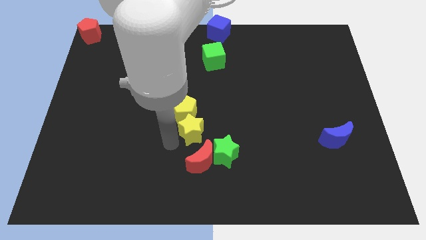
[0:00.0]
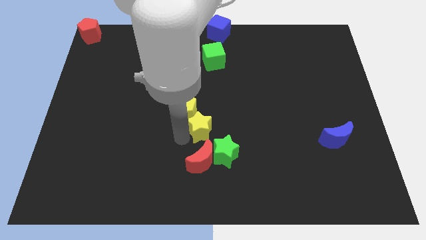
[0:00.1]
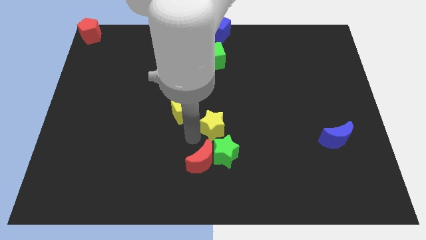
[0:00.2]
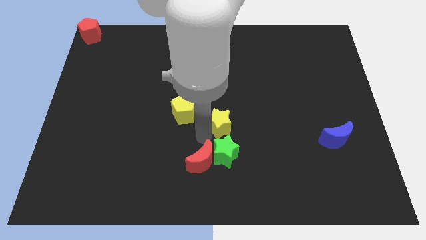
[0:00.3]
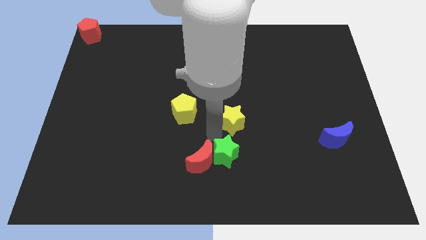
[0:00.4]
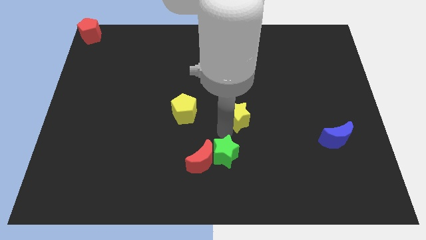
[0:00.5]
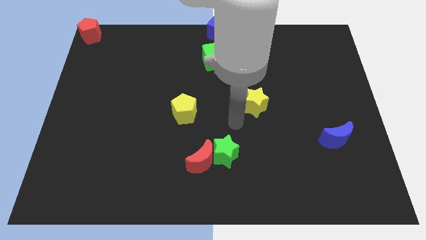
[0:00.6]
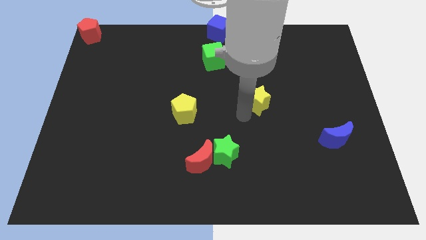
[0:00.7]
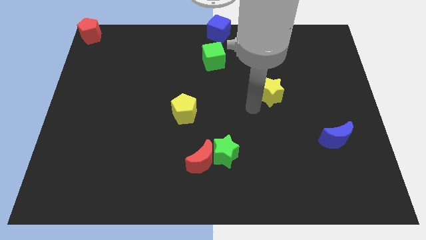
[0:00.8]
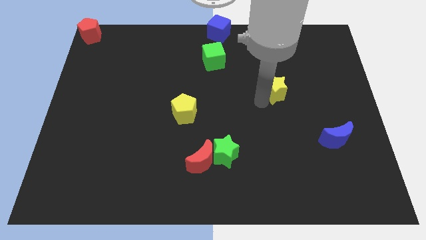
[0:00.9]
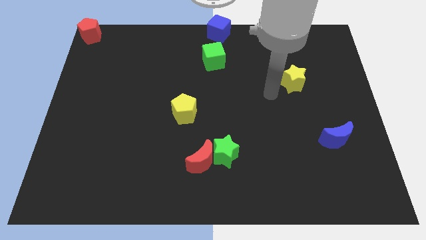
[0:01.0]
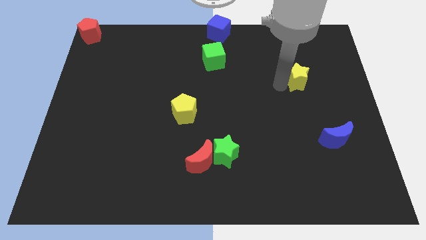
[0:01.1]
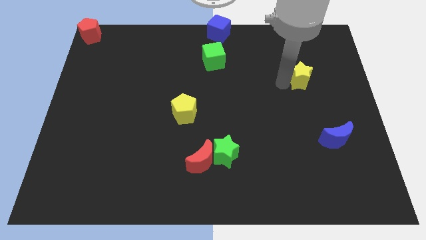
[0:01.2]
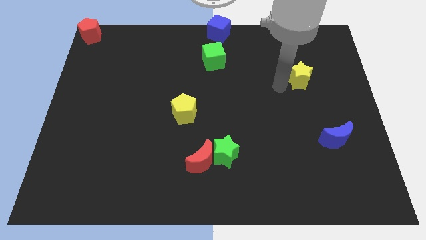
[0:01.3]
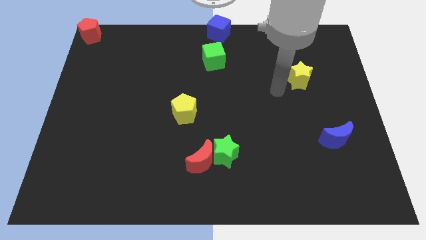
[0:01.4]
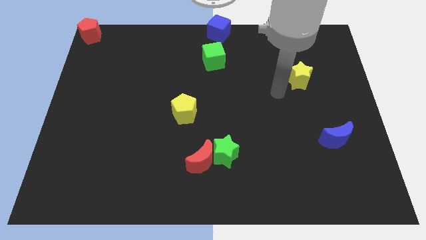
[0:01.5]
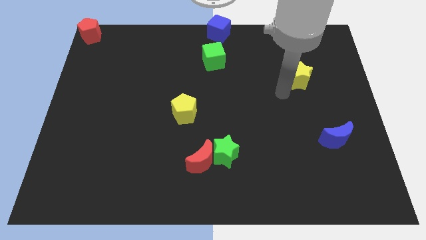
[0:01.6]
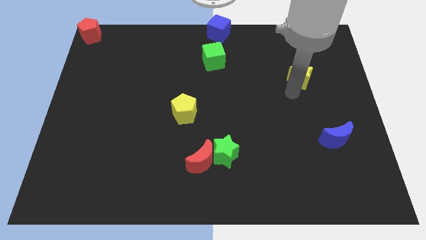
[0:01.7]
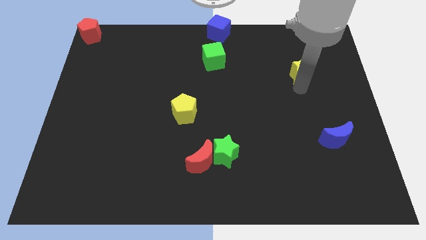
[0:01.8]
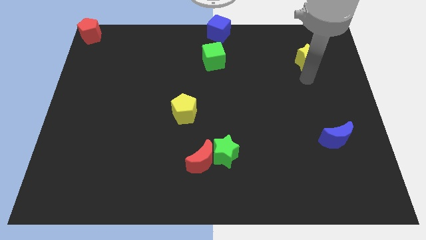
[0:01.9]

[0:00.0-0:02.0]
move the yellow star to the top side of the blue cube

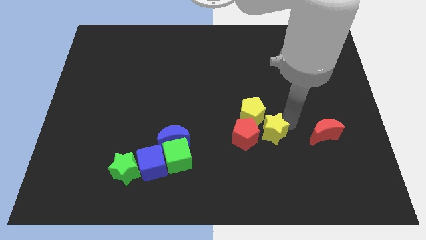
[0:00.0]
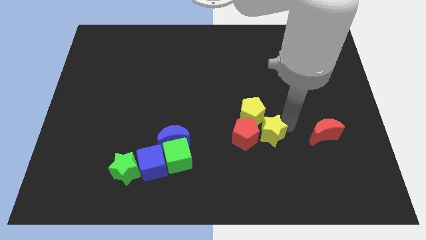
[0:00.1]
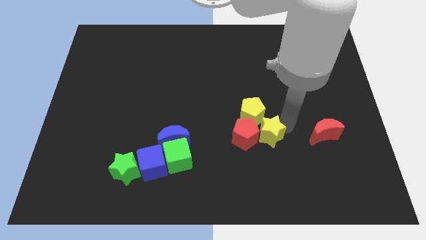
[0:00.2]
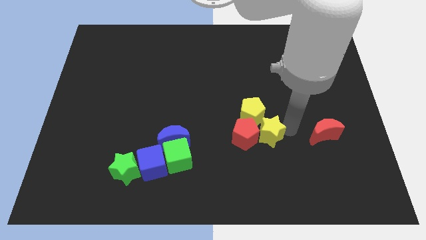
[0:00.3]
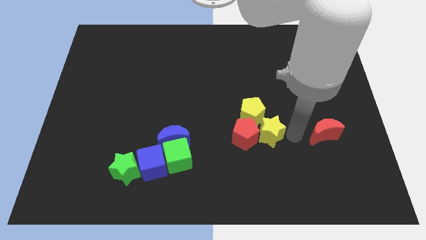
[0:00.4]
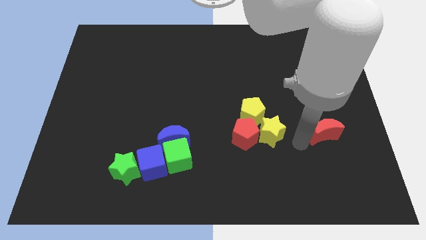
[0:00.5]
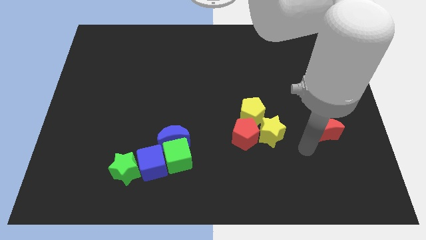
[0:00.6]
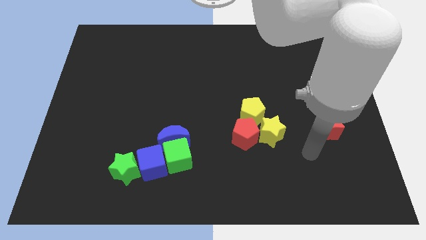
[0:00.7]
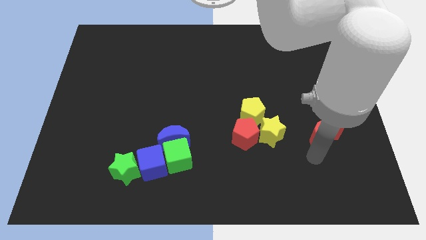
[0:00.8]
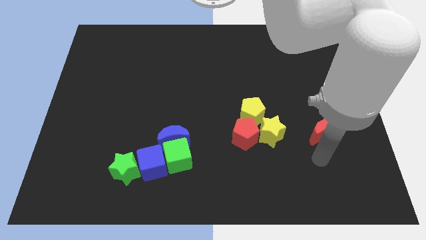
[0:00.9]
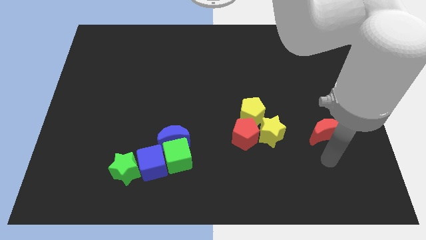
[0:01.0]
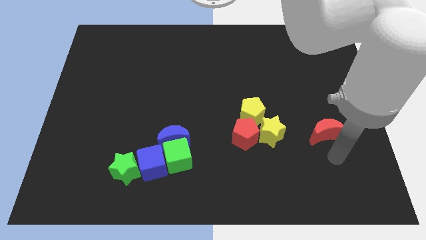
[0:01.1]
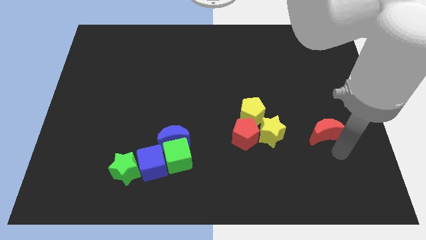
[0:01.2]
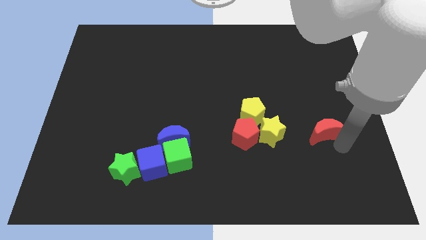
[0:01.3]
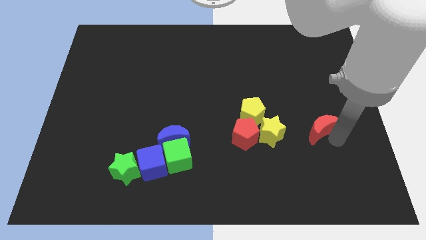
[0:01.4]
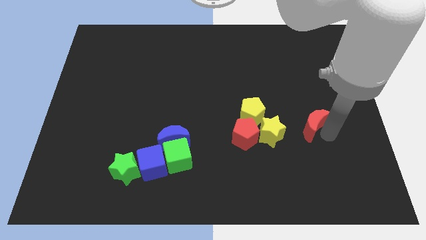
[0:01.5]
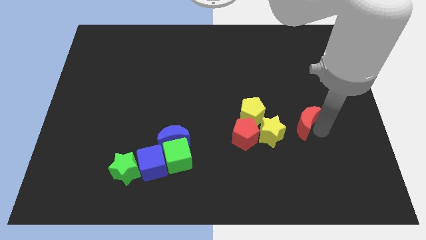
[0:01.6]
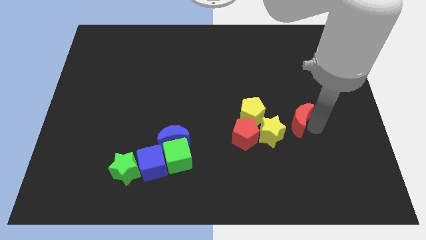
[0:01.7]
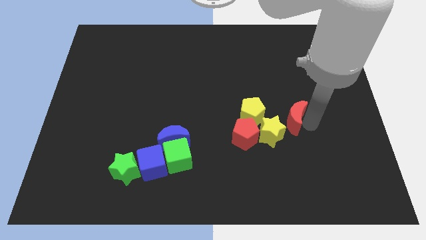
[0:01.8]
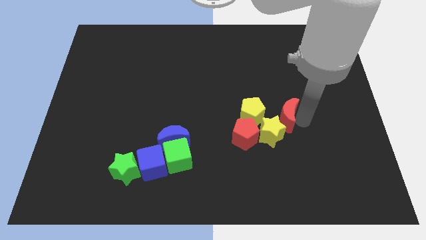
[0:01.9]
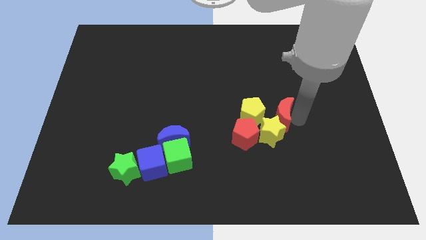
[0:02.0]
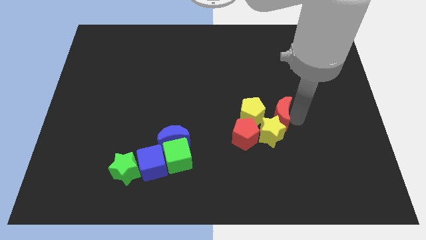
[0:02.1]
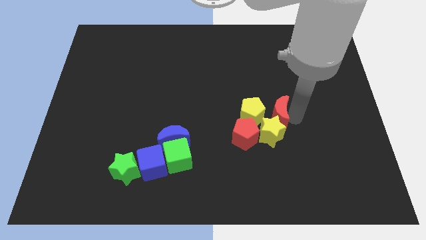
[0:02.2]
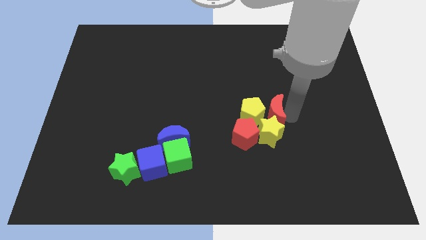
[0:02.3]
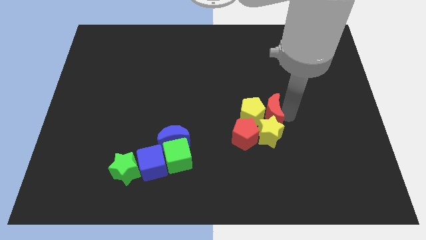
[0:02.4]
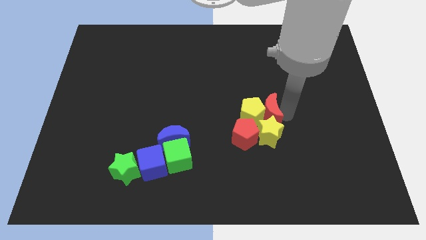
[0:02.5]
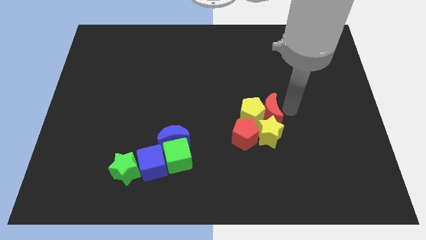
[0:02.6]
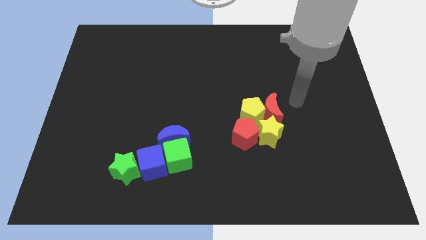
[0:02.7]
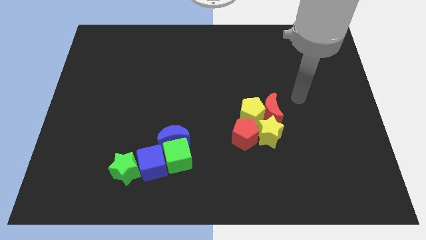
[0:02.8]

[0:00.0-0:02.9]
place the red moon to the right side of yellow pentagon

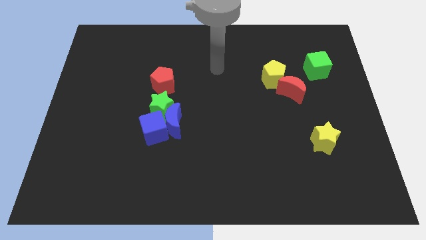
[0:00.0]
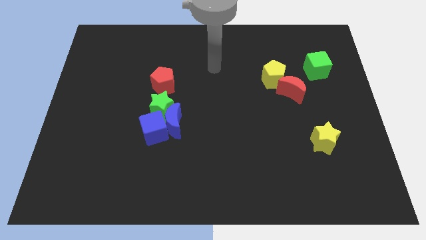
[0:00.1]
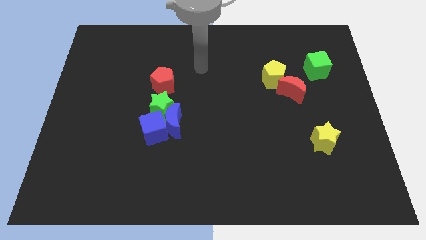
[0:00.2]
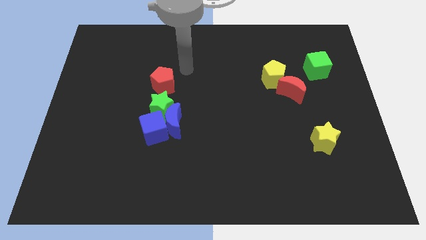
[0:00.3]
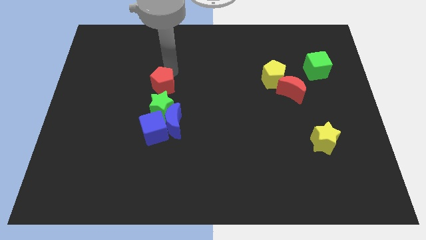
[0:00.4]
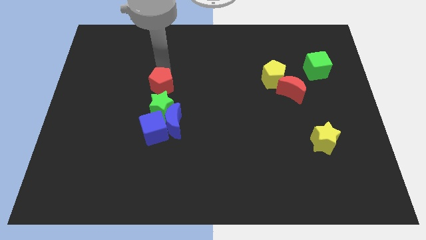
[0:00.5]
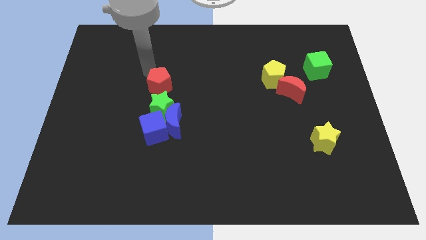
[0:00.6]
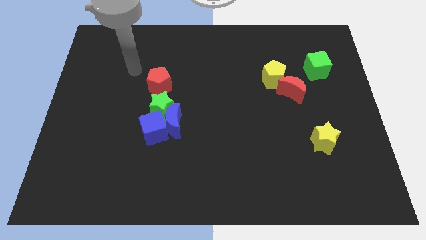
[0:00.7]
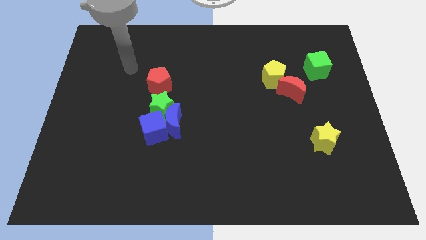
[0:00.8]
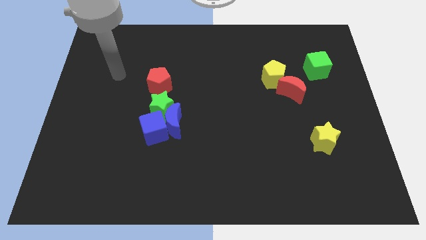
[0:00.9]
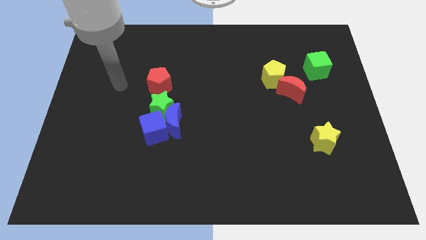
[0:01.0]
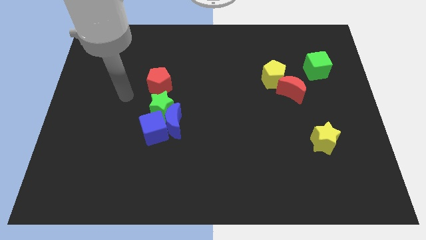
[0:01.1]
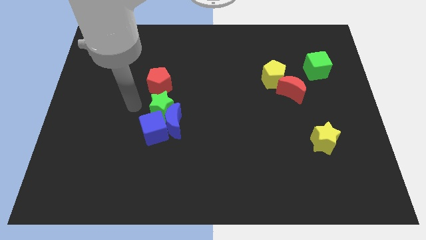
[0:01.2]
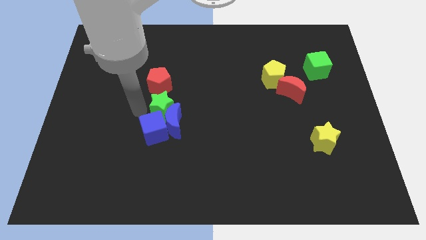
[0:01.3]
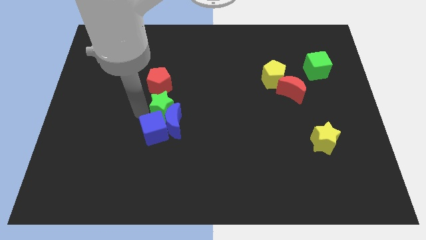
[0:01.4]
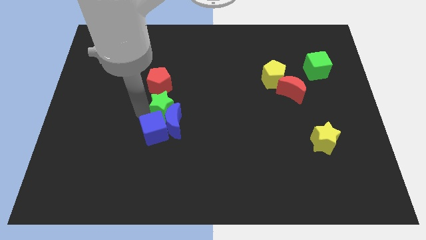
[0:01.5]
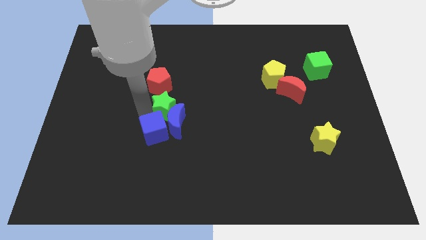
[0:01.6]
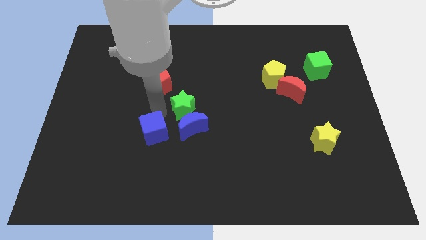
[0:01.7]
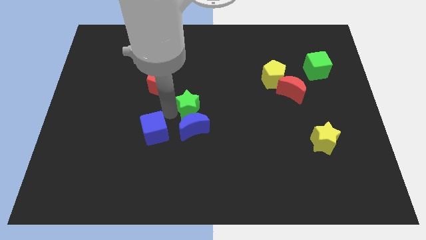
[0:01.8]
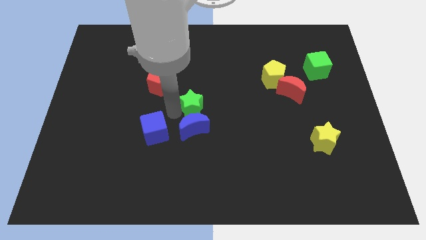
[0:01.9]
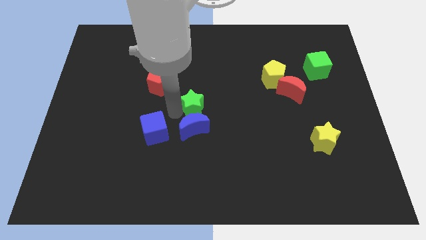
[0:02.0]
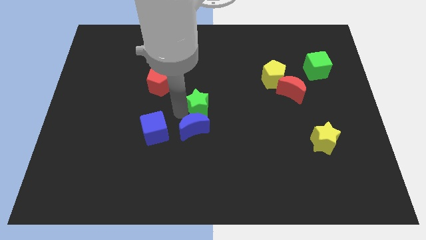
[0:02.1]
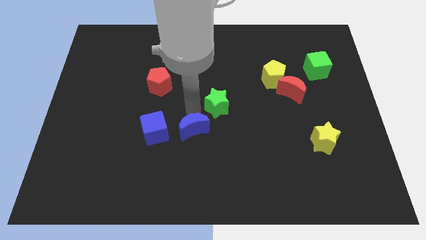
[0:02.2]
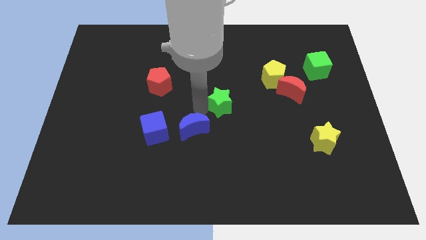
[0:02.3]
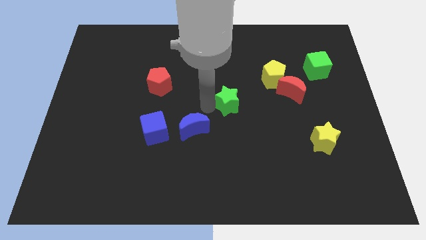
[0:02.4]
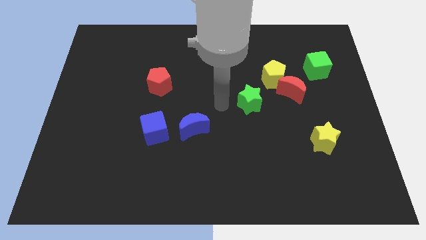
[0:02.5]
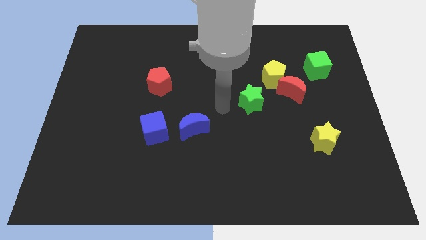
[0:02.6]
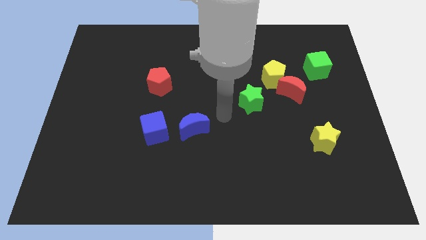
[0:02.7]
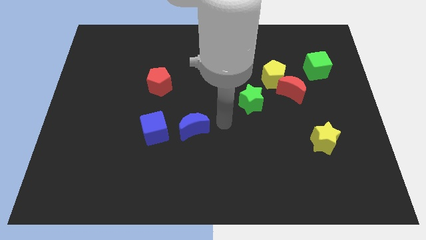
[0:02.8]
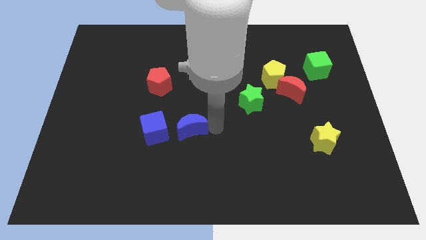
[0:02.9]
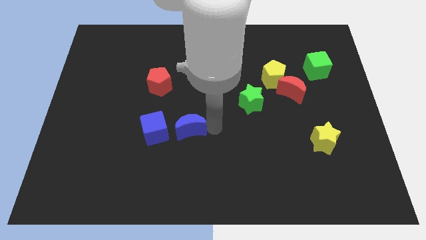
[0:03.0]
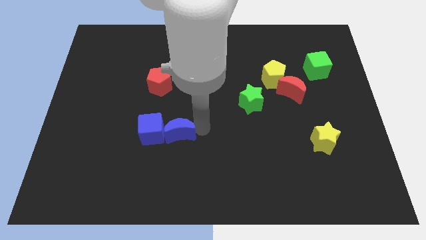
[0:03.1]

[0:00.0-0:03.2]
move the green star diagonally top left to yellow star

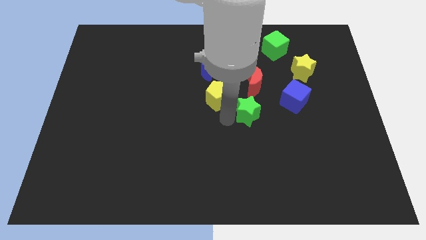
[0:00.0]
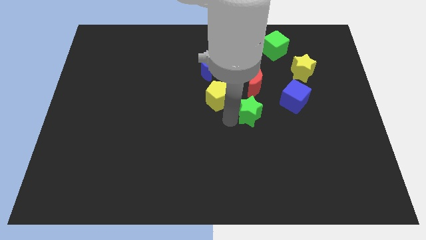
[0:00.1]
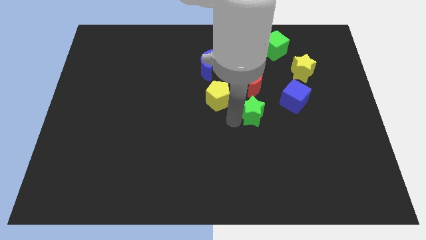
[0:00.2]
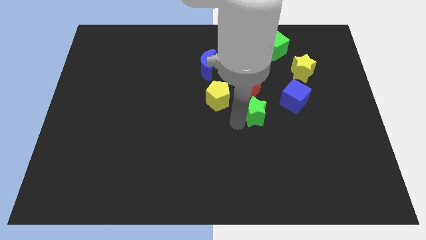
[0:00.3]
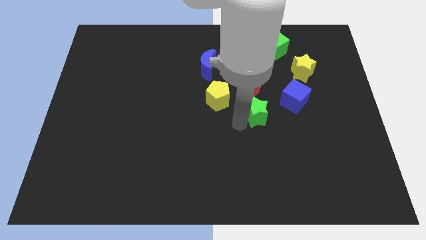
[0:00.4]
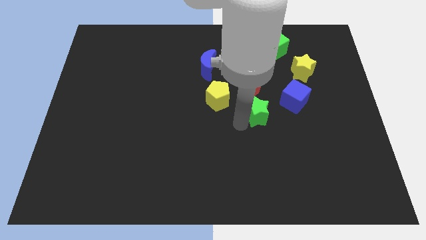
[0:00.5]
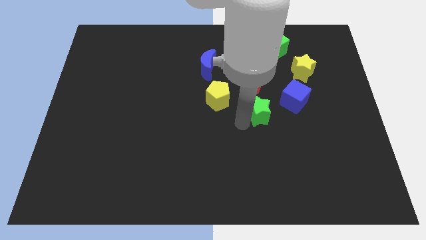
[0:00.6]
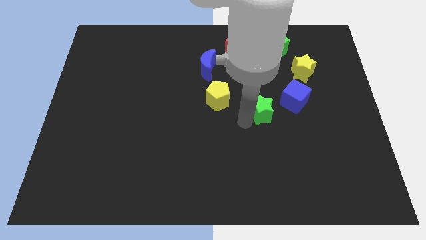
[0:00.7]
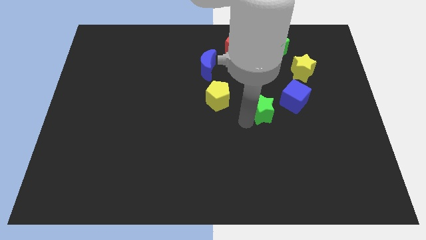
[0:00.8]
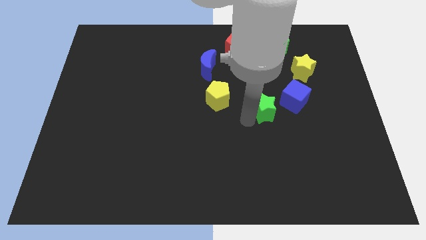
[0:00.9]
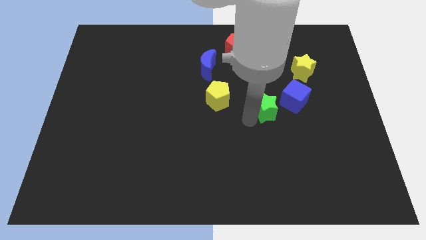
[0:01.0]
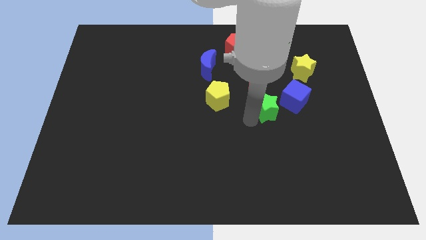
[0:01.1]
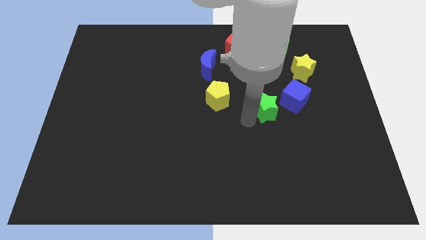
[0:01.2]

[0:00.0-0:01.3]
move the green star slightly to the left of blue cube
